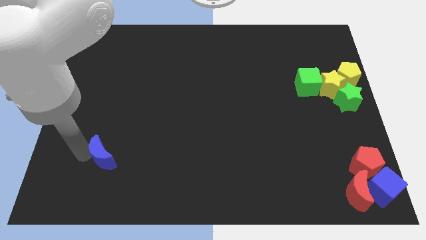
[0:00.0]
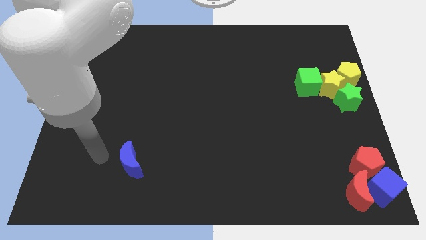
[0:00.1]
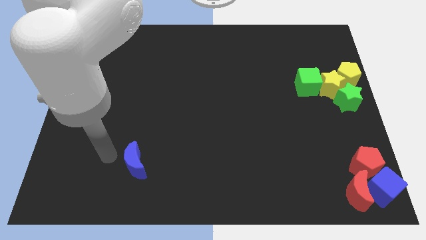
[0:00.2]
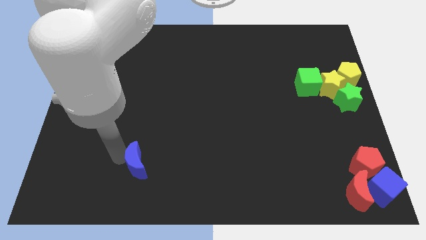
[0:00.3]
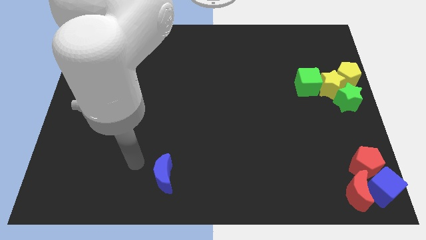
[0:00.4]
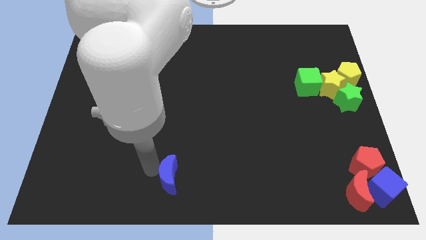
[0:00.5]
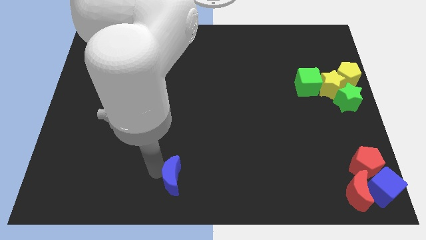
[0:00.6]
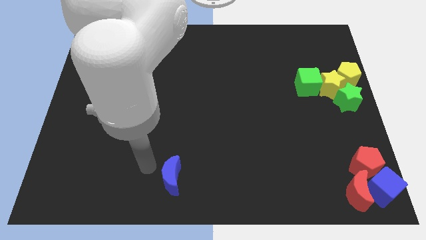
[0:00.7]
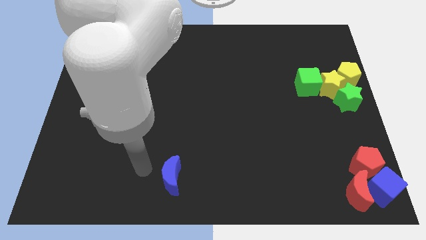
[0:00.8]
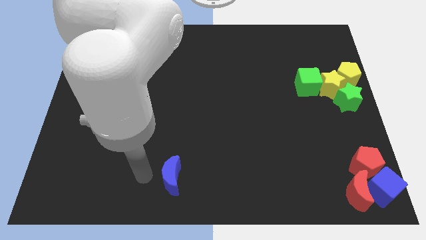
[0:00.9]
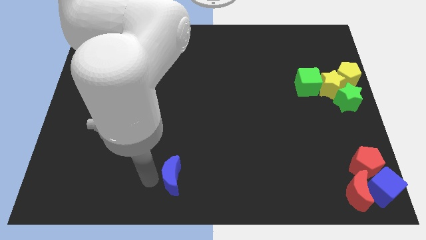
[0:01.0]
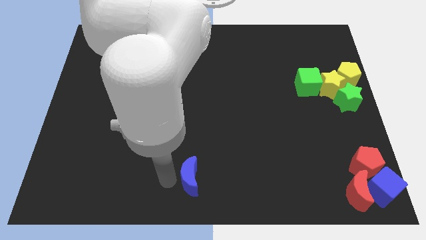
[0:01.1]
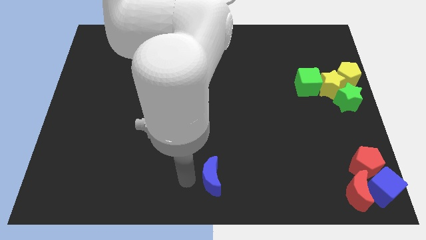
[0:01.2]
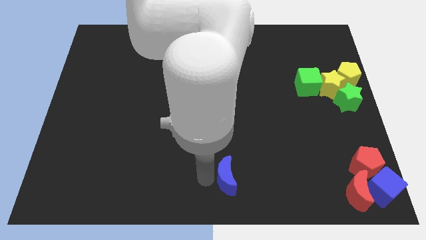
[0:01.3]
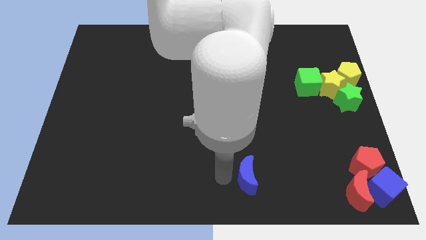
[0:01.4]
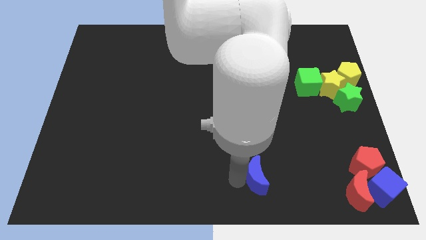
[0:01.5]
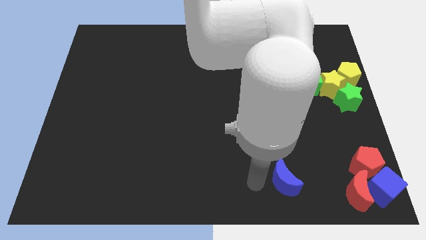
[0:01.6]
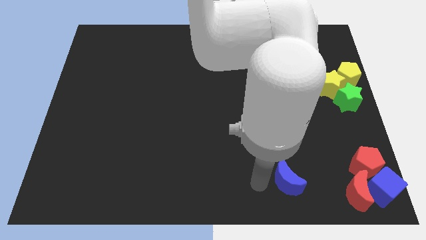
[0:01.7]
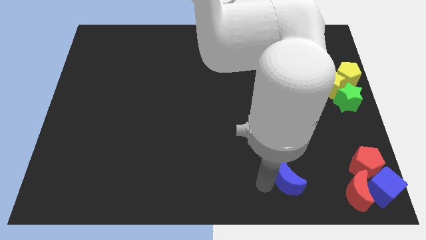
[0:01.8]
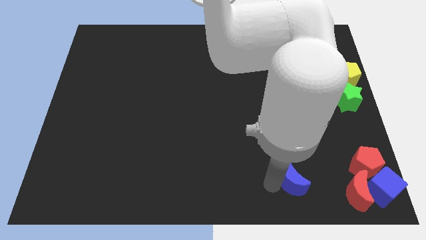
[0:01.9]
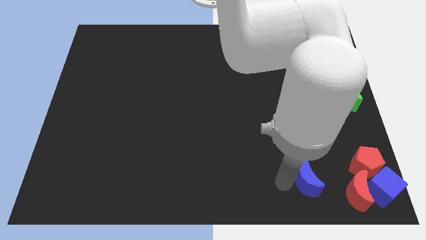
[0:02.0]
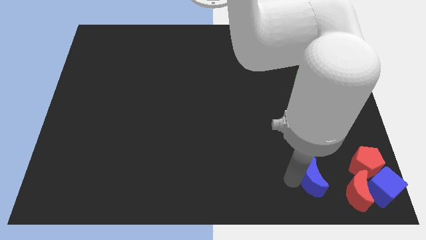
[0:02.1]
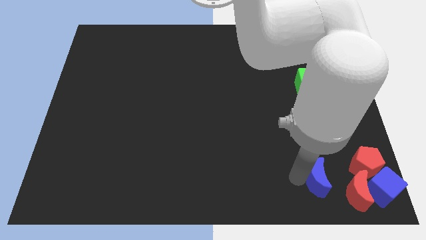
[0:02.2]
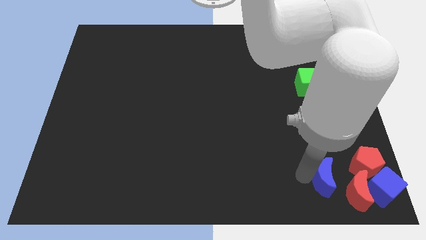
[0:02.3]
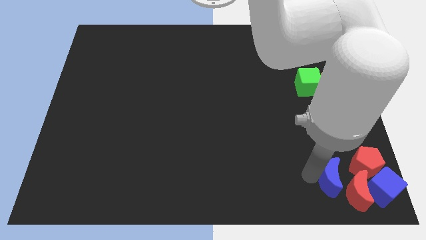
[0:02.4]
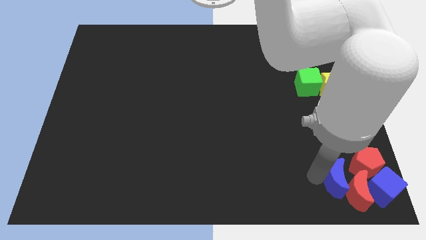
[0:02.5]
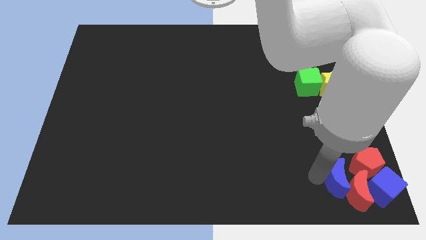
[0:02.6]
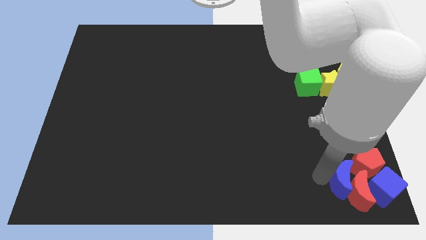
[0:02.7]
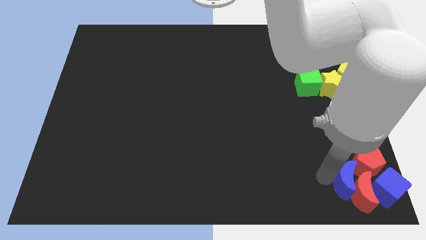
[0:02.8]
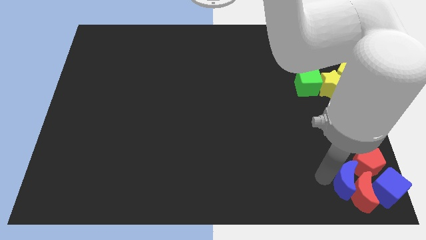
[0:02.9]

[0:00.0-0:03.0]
push the blue moon into the group of blocks

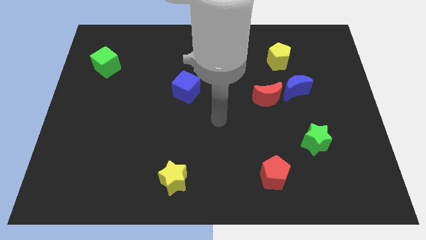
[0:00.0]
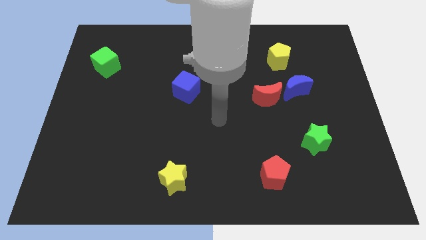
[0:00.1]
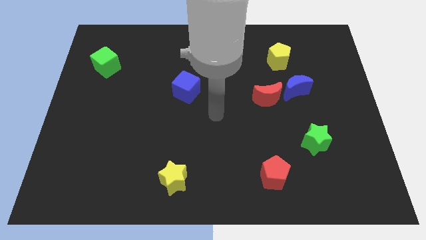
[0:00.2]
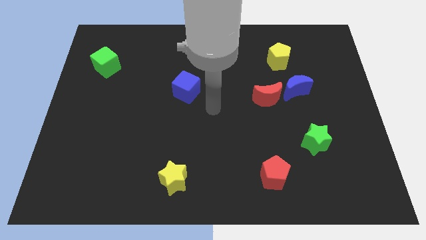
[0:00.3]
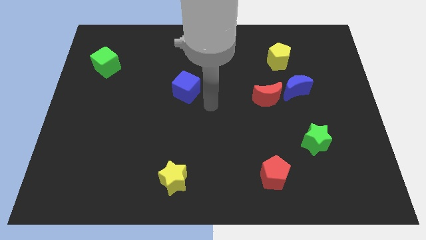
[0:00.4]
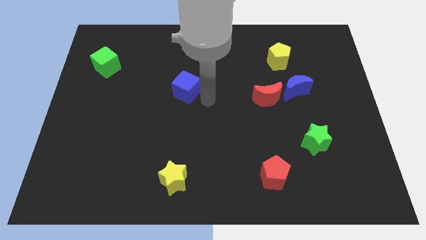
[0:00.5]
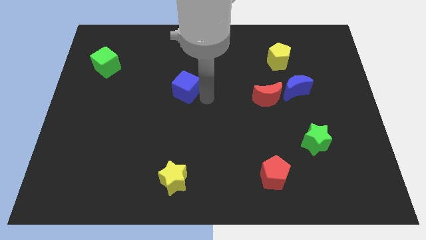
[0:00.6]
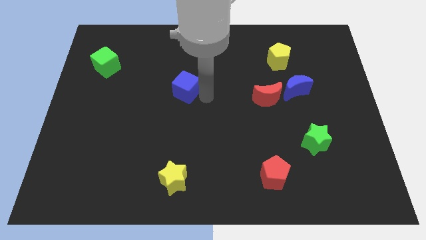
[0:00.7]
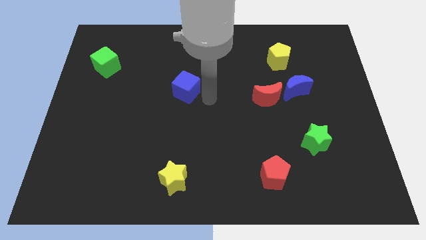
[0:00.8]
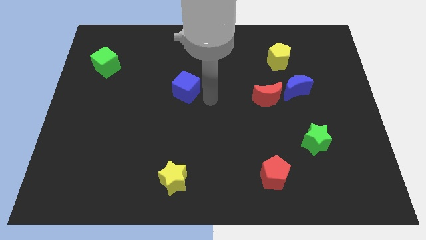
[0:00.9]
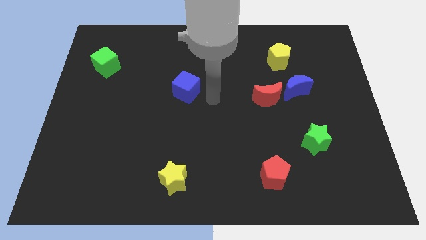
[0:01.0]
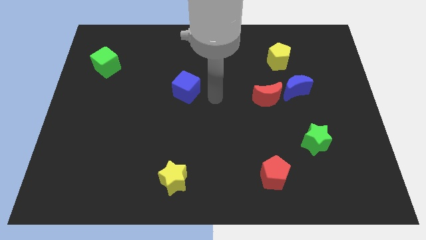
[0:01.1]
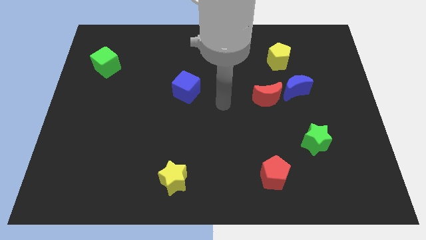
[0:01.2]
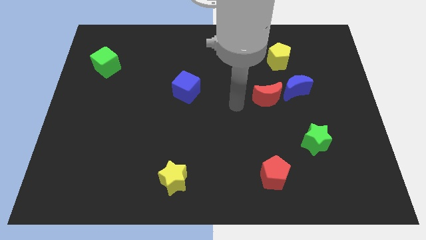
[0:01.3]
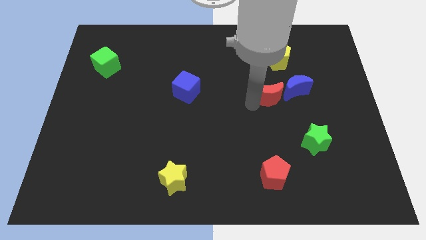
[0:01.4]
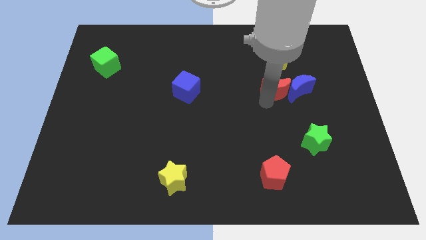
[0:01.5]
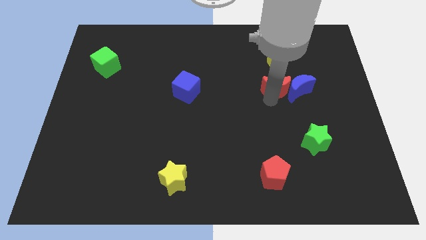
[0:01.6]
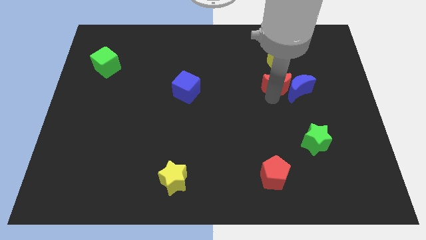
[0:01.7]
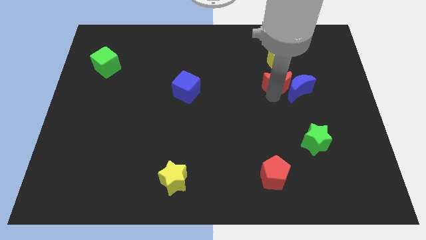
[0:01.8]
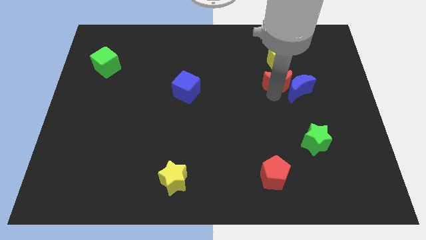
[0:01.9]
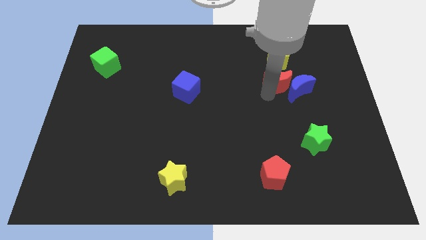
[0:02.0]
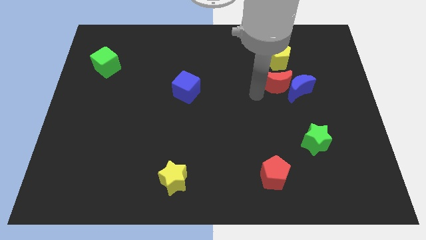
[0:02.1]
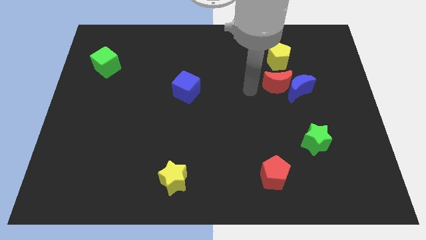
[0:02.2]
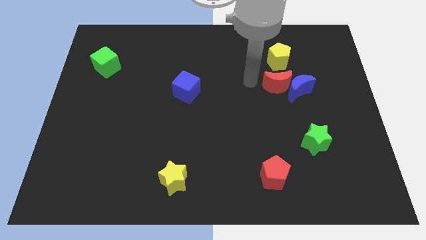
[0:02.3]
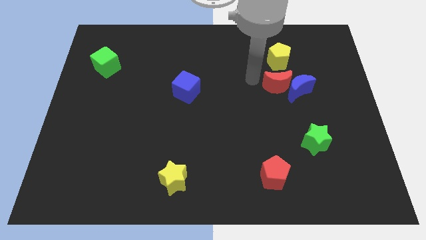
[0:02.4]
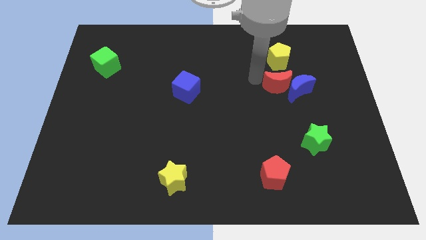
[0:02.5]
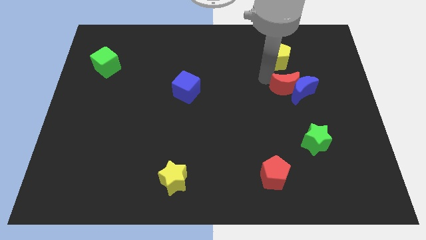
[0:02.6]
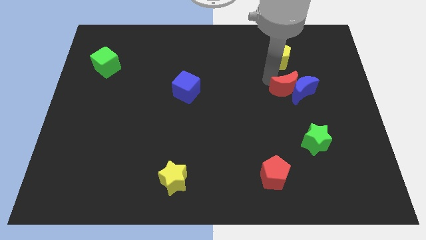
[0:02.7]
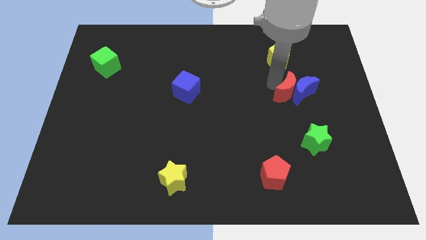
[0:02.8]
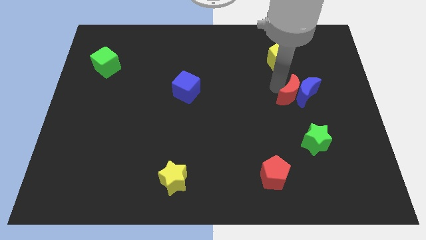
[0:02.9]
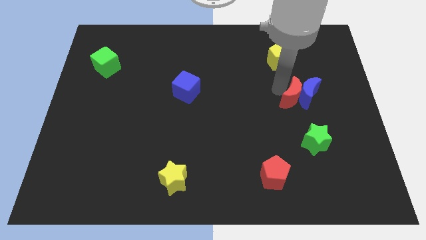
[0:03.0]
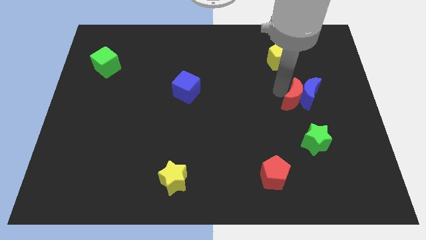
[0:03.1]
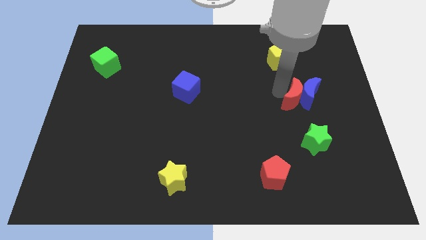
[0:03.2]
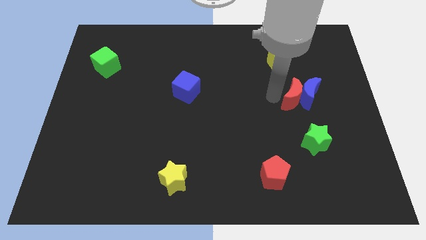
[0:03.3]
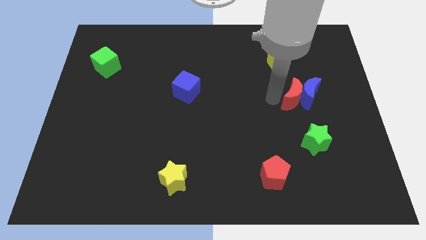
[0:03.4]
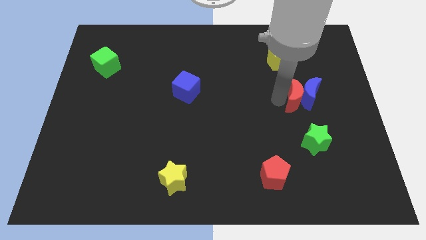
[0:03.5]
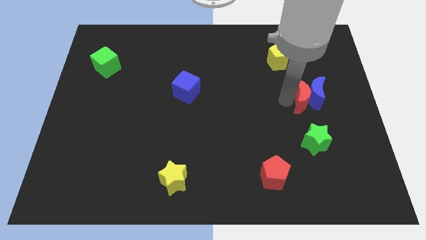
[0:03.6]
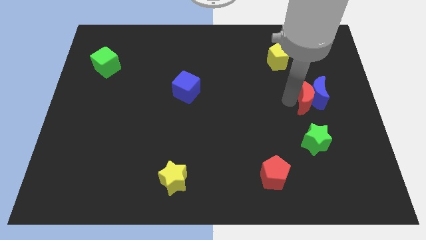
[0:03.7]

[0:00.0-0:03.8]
push the red crescent towards the blue crescent

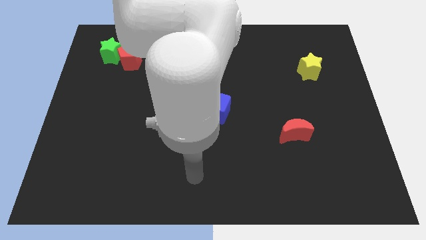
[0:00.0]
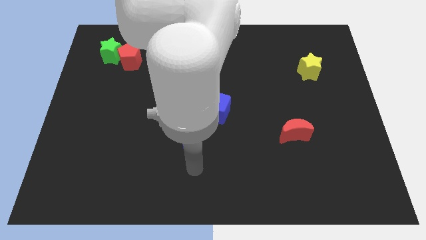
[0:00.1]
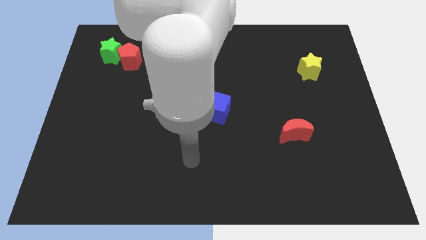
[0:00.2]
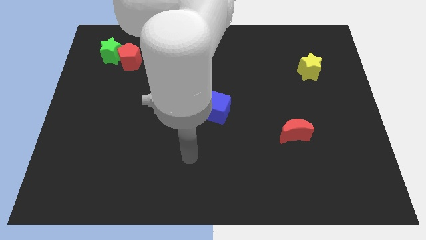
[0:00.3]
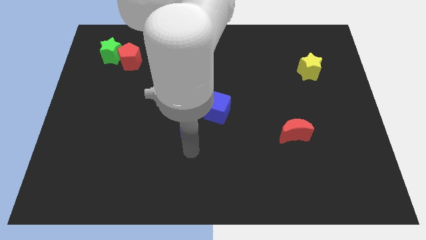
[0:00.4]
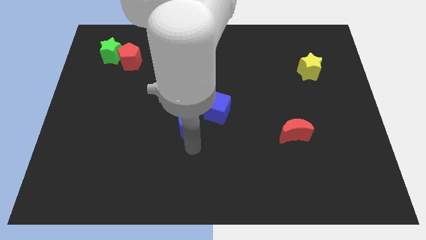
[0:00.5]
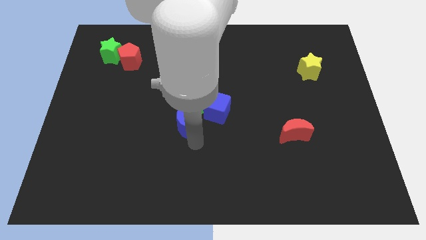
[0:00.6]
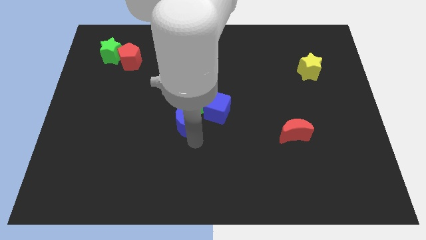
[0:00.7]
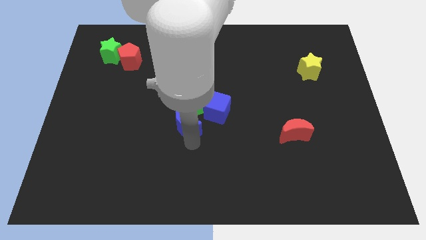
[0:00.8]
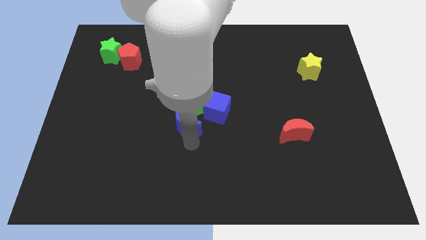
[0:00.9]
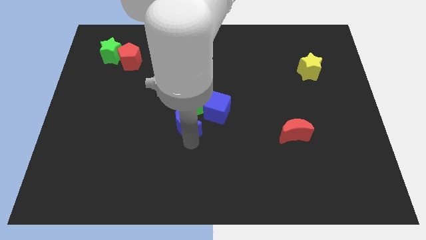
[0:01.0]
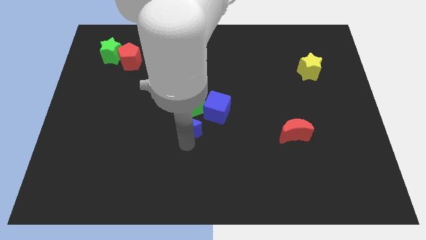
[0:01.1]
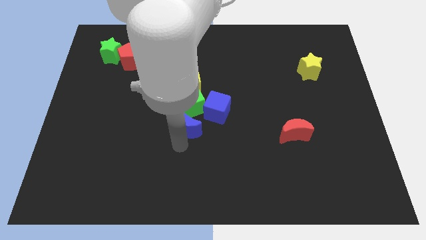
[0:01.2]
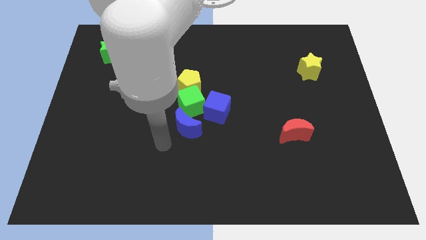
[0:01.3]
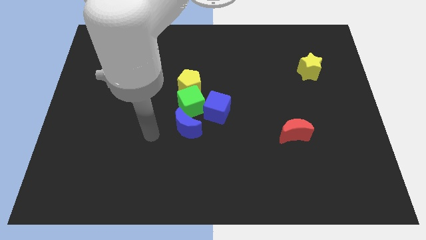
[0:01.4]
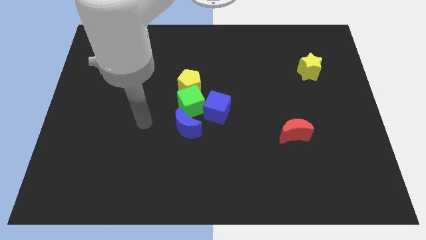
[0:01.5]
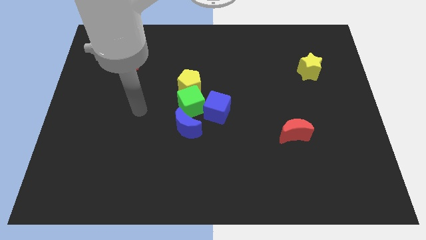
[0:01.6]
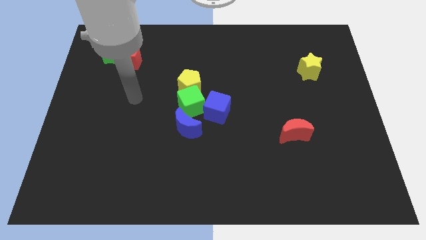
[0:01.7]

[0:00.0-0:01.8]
move blue moon into the green cube

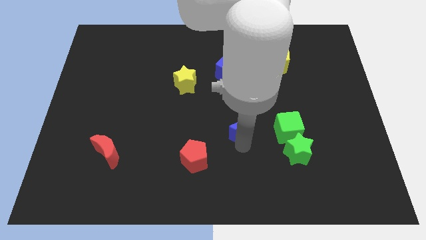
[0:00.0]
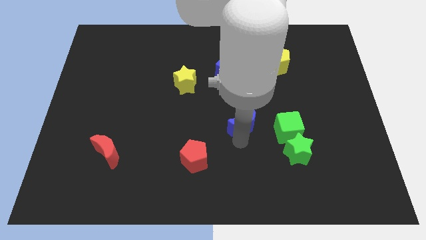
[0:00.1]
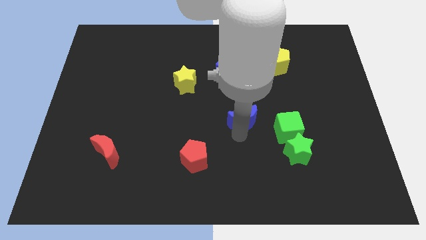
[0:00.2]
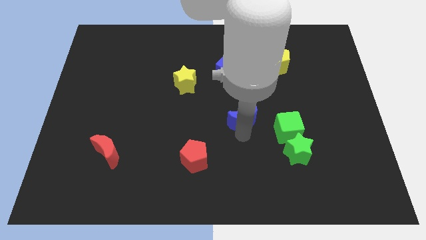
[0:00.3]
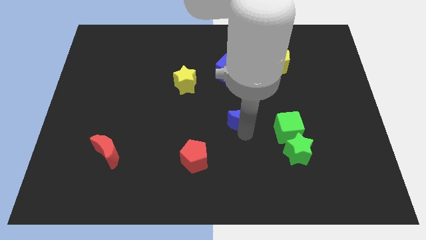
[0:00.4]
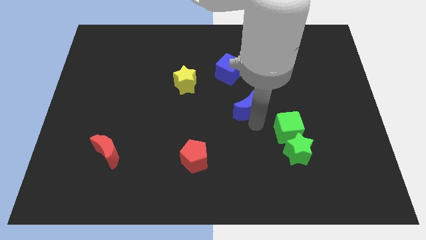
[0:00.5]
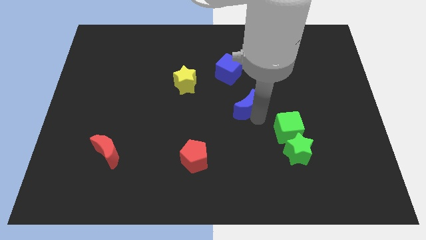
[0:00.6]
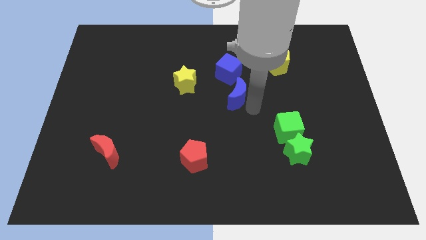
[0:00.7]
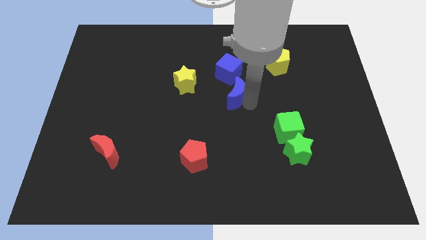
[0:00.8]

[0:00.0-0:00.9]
move the blue crescent to the center of the board
